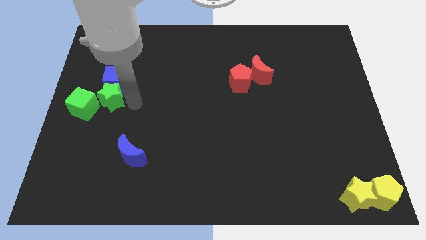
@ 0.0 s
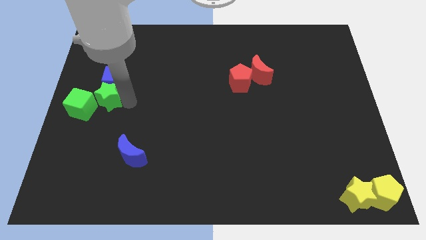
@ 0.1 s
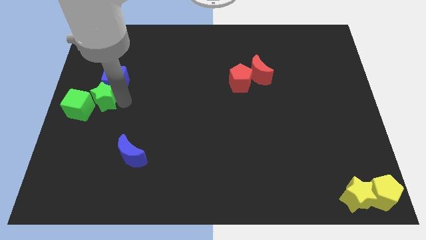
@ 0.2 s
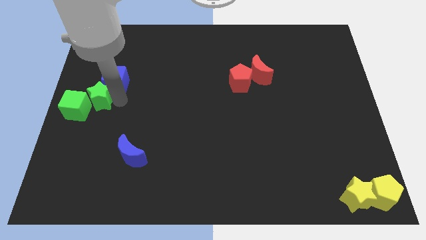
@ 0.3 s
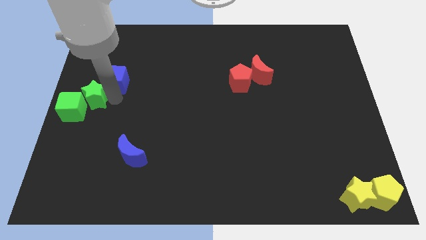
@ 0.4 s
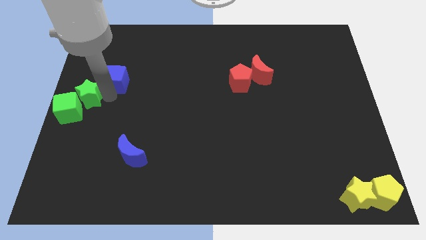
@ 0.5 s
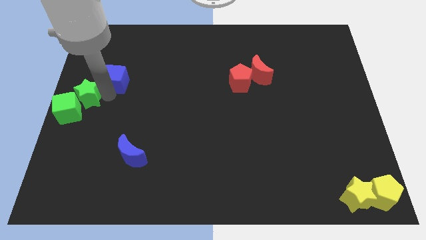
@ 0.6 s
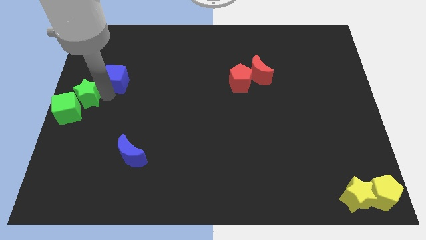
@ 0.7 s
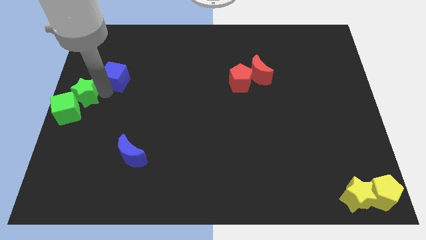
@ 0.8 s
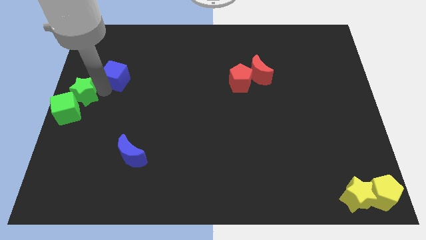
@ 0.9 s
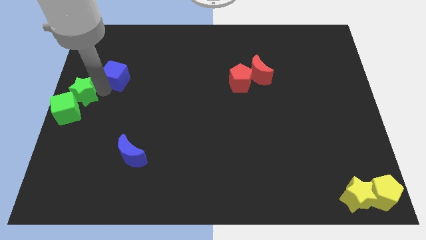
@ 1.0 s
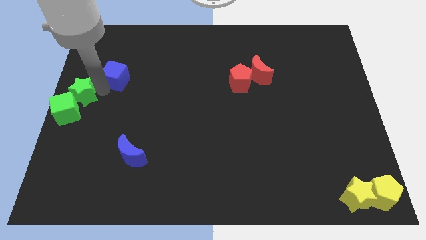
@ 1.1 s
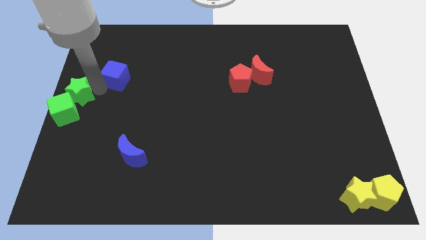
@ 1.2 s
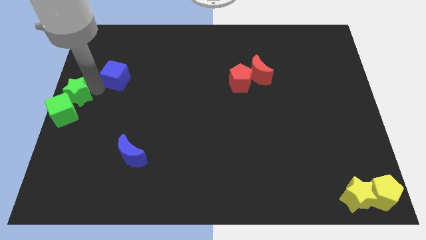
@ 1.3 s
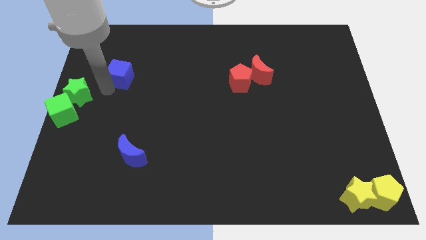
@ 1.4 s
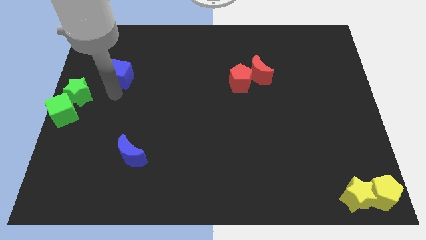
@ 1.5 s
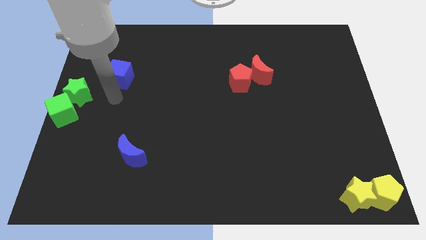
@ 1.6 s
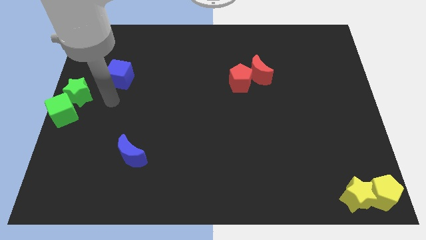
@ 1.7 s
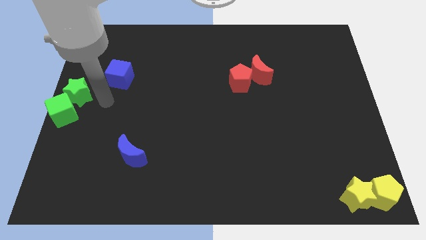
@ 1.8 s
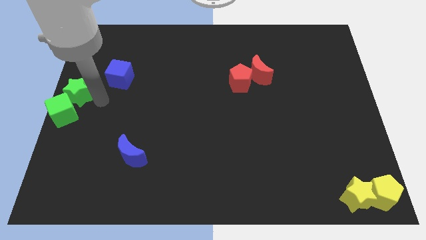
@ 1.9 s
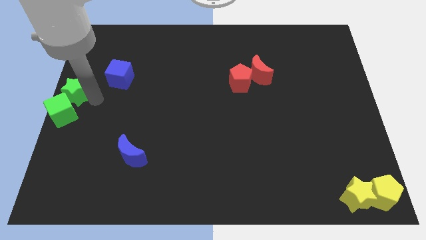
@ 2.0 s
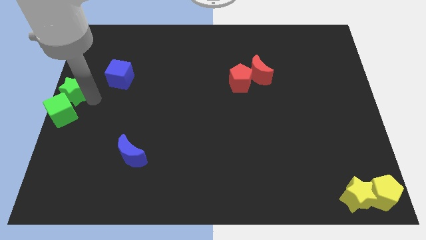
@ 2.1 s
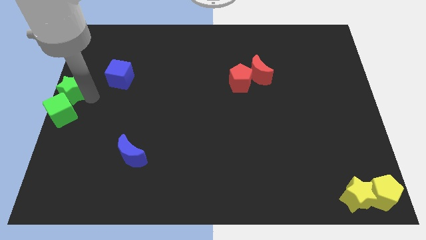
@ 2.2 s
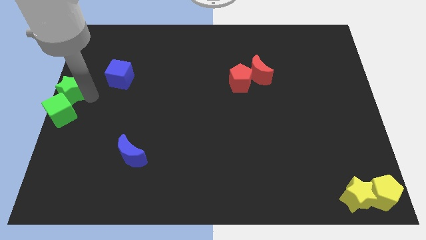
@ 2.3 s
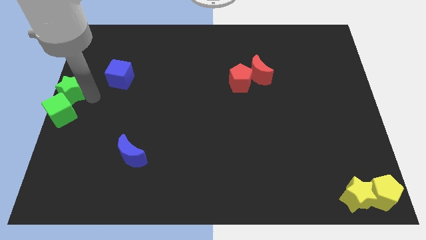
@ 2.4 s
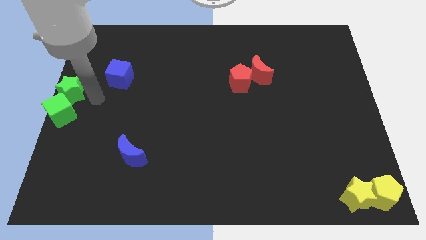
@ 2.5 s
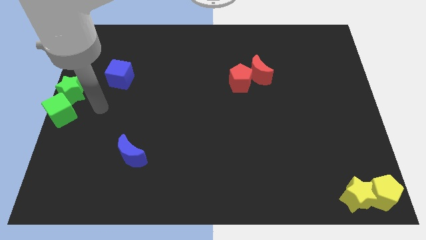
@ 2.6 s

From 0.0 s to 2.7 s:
move the green blocks towards the left centre of the board

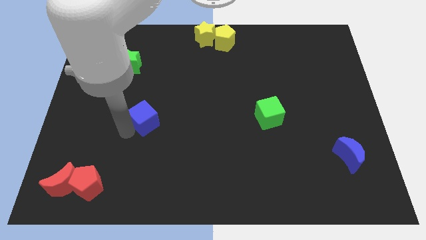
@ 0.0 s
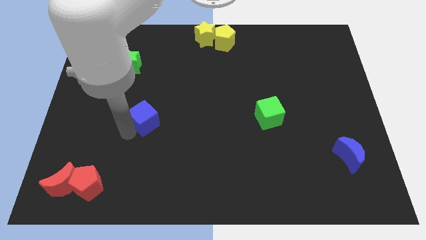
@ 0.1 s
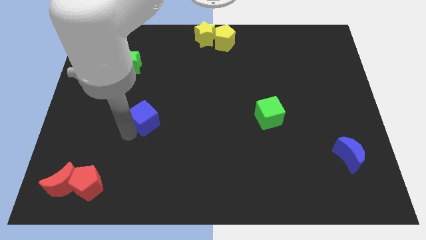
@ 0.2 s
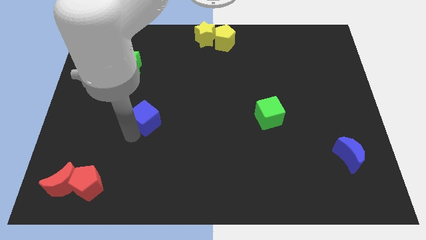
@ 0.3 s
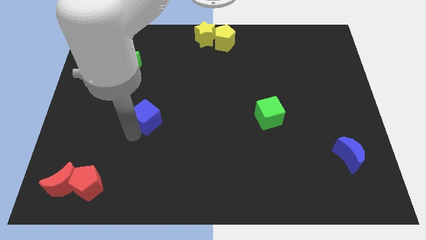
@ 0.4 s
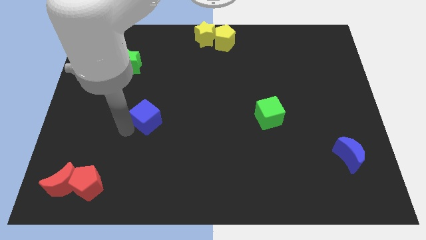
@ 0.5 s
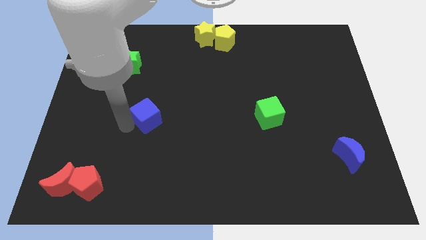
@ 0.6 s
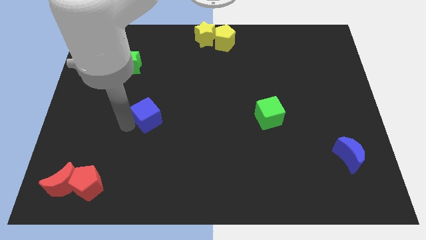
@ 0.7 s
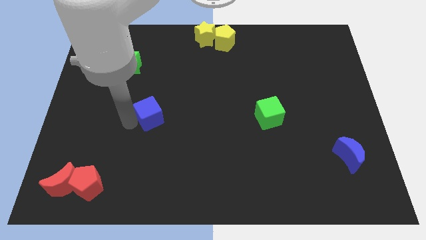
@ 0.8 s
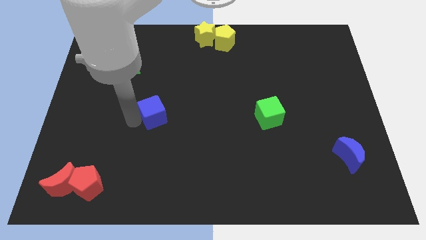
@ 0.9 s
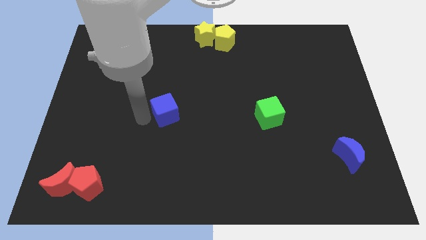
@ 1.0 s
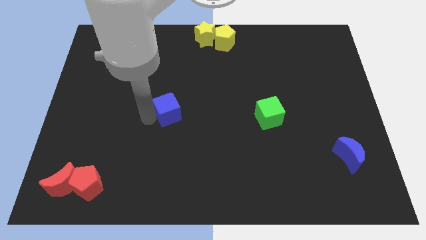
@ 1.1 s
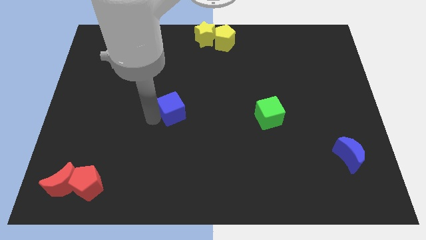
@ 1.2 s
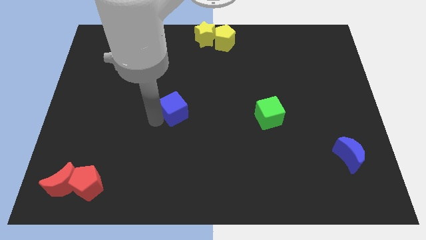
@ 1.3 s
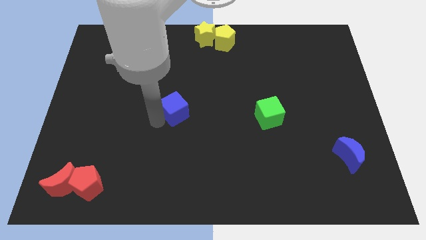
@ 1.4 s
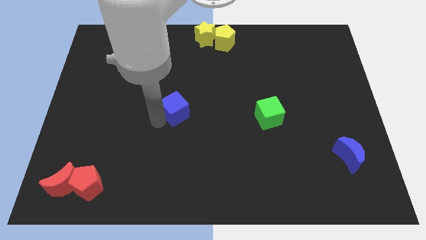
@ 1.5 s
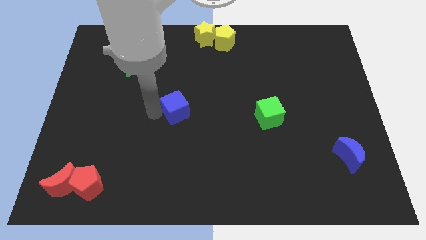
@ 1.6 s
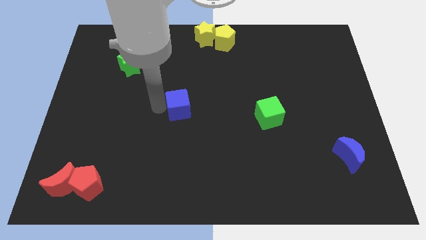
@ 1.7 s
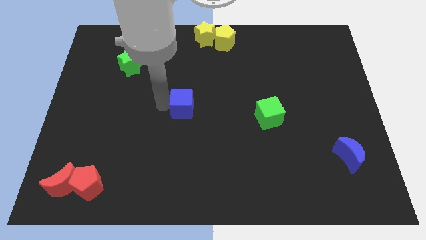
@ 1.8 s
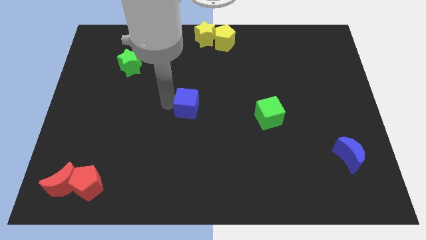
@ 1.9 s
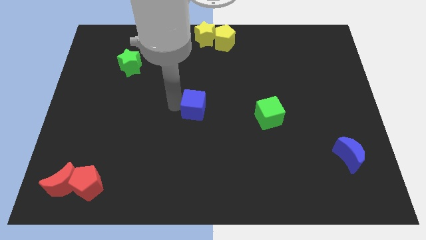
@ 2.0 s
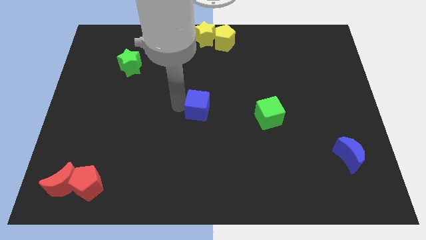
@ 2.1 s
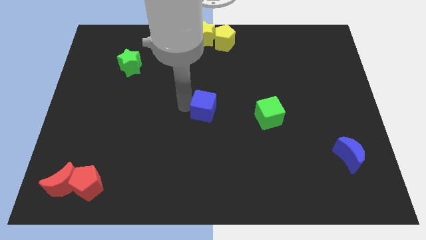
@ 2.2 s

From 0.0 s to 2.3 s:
push blue cube below yellow star

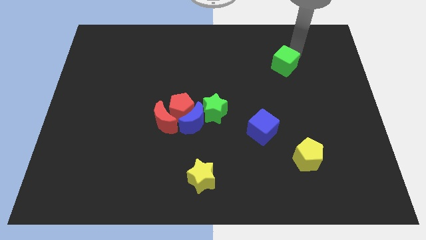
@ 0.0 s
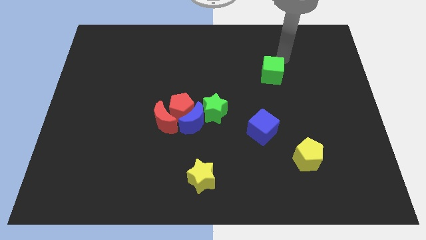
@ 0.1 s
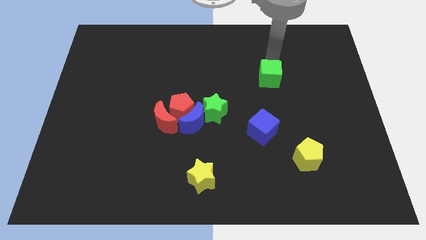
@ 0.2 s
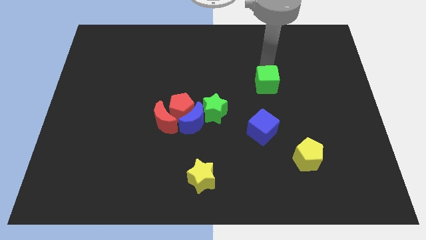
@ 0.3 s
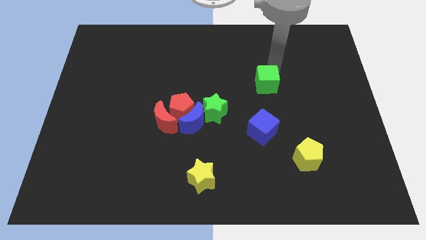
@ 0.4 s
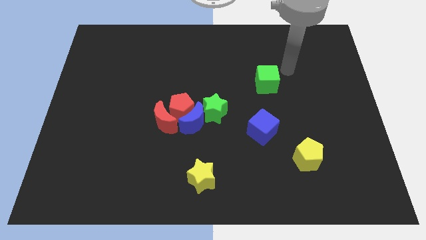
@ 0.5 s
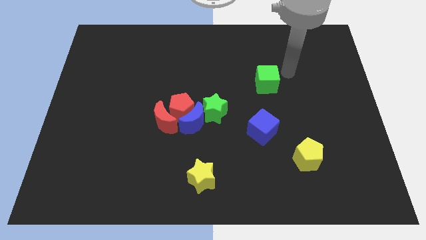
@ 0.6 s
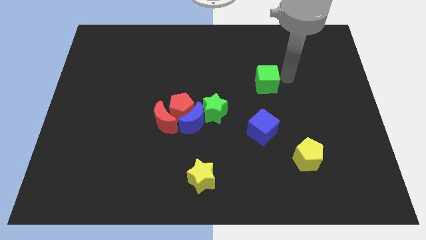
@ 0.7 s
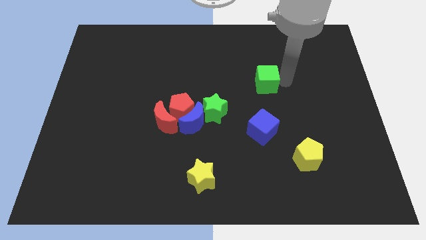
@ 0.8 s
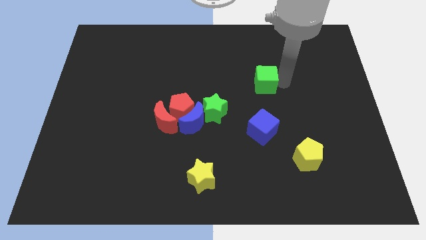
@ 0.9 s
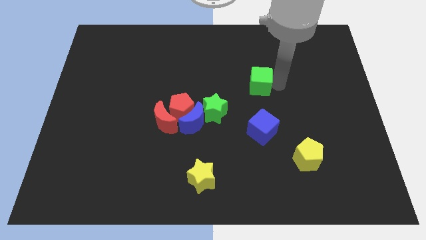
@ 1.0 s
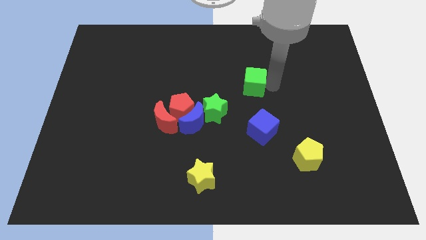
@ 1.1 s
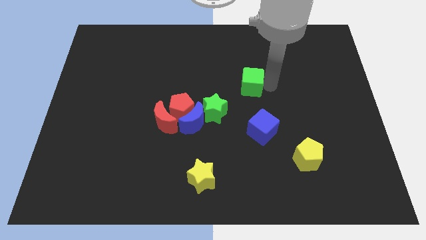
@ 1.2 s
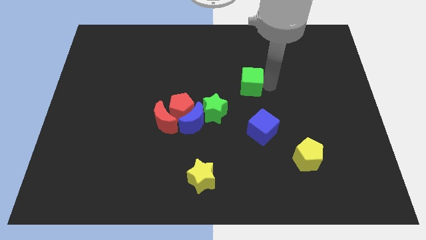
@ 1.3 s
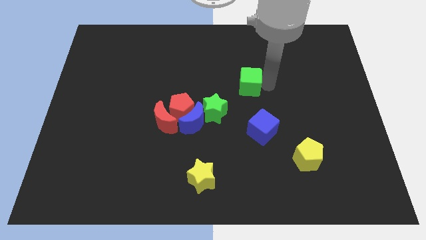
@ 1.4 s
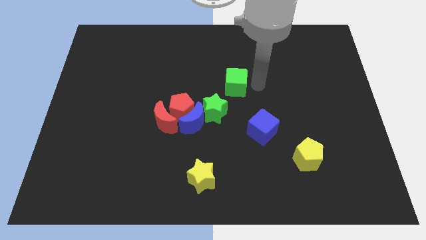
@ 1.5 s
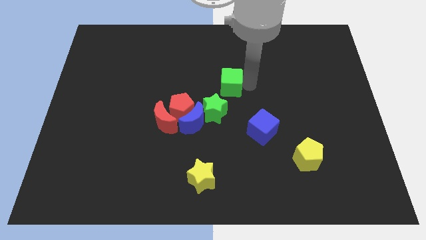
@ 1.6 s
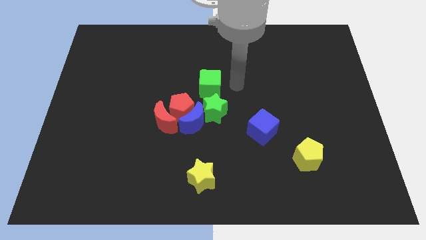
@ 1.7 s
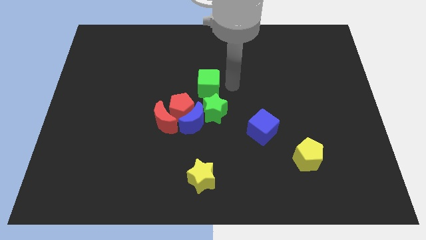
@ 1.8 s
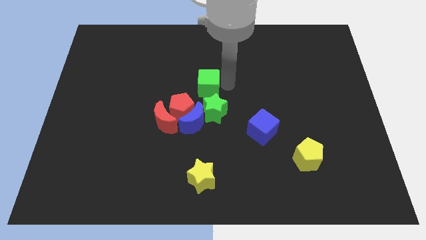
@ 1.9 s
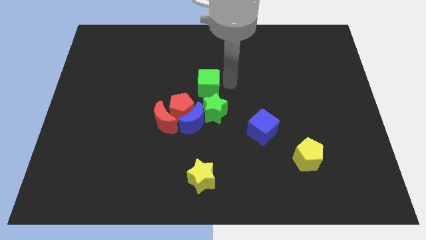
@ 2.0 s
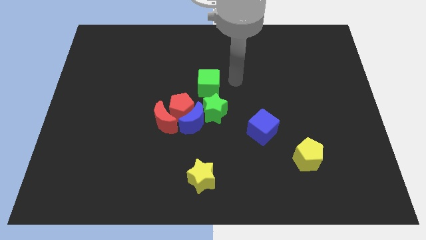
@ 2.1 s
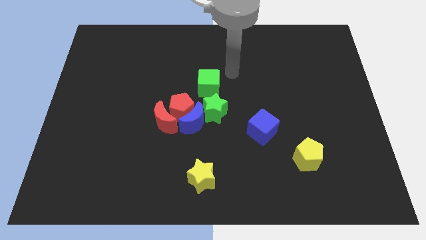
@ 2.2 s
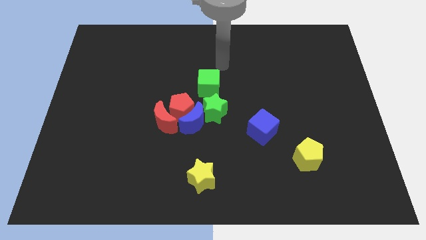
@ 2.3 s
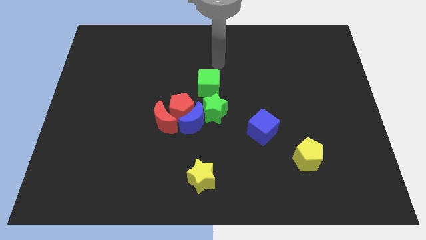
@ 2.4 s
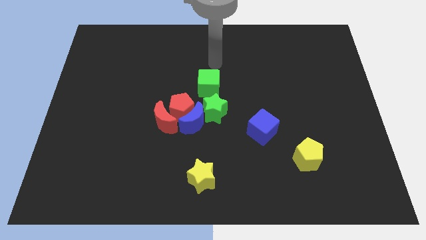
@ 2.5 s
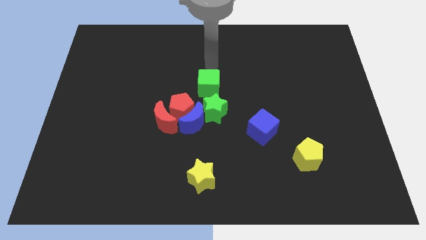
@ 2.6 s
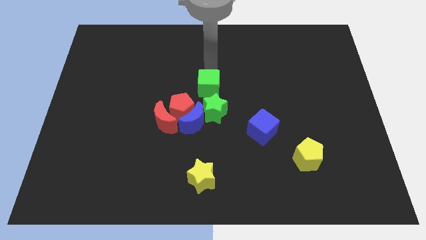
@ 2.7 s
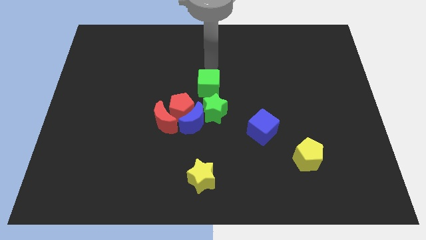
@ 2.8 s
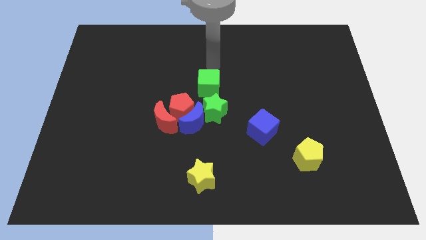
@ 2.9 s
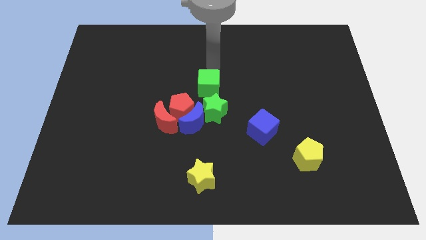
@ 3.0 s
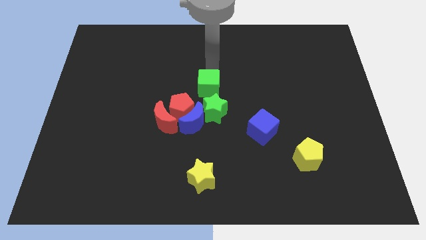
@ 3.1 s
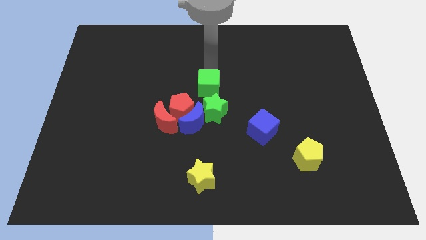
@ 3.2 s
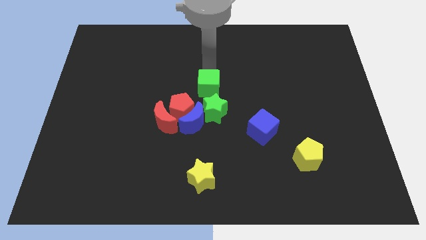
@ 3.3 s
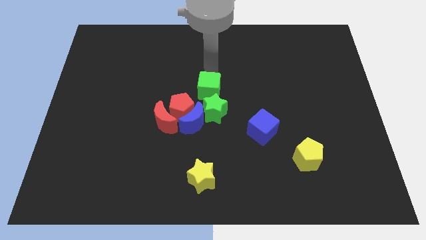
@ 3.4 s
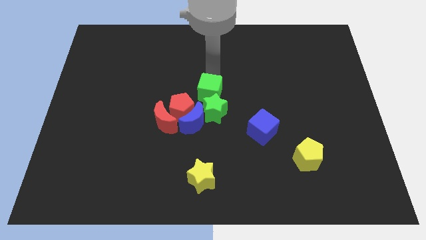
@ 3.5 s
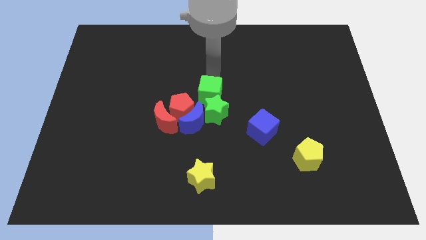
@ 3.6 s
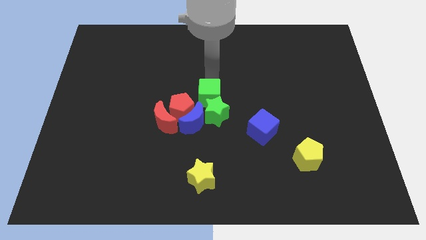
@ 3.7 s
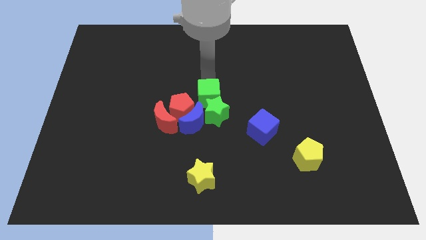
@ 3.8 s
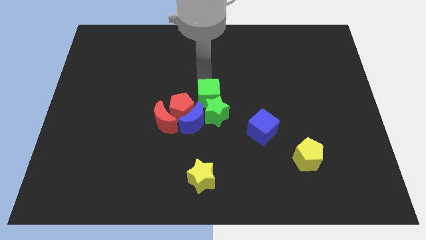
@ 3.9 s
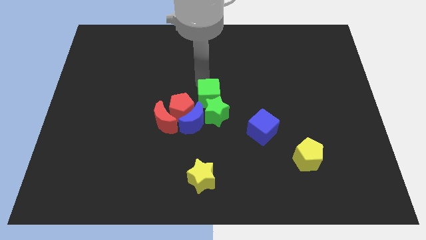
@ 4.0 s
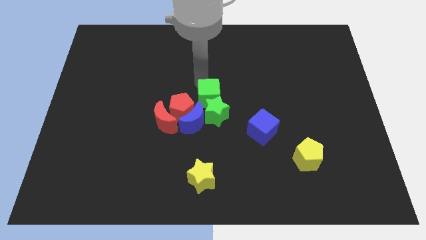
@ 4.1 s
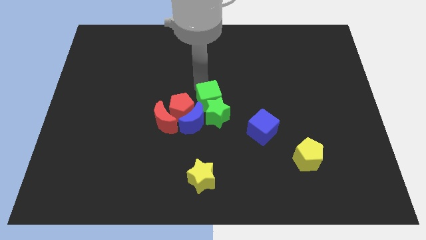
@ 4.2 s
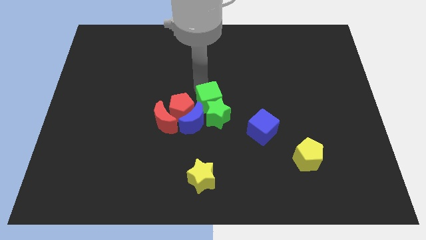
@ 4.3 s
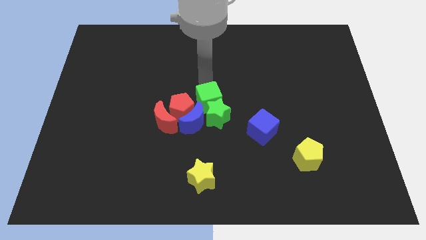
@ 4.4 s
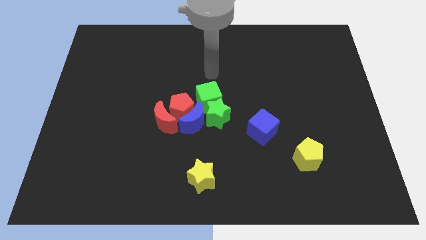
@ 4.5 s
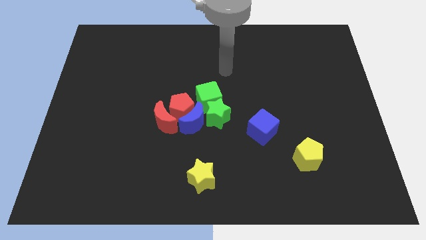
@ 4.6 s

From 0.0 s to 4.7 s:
push the green star towards the center using the green cube
